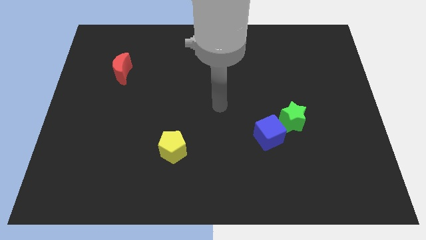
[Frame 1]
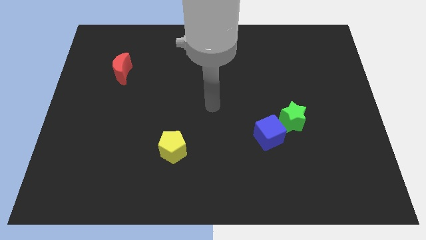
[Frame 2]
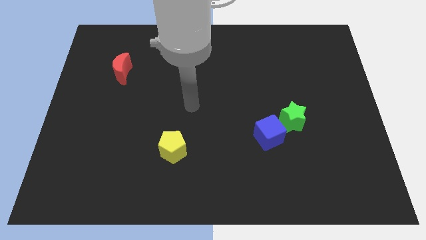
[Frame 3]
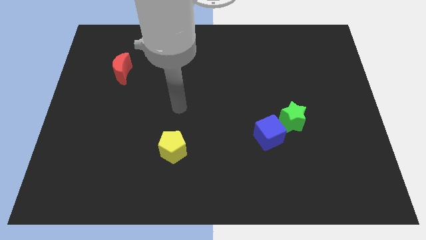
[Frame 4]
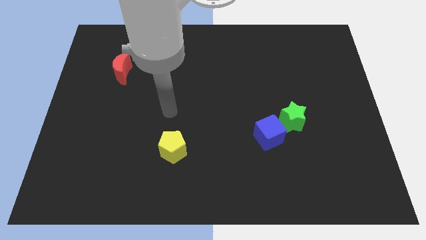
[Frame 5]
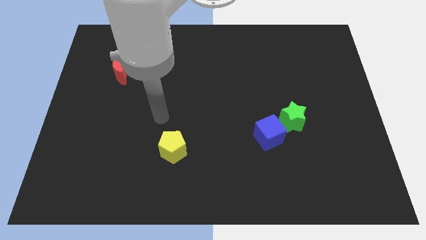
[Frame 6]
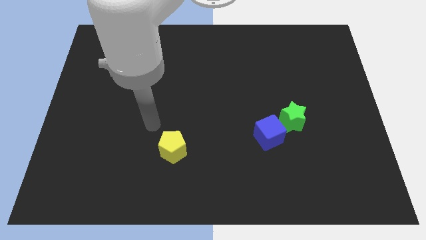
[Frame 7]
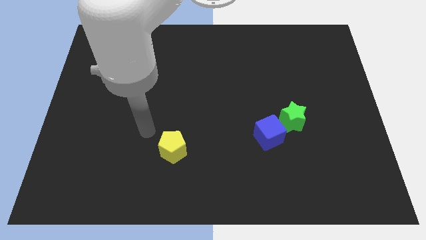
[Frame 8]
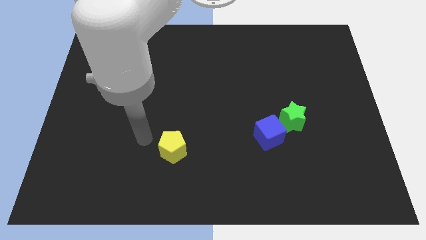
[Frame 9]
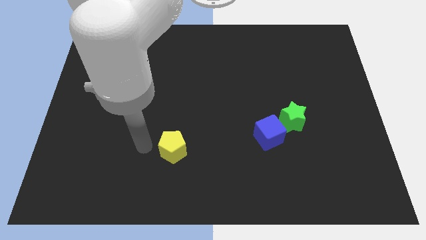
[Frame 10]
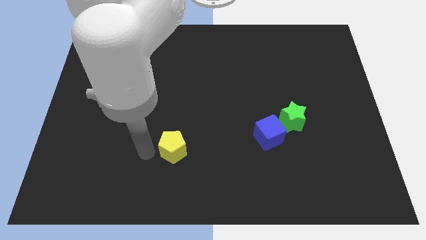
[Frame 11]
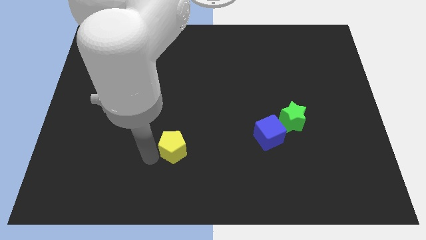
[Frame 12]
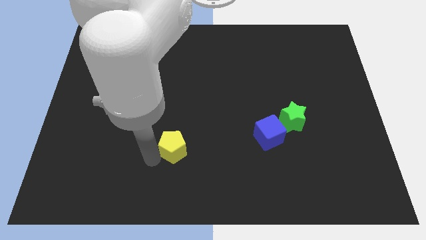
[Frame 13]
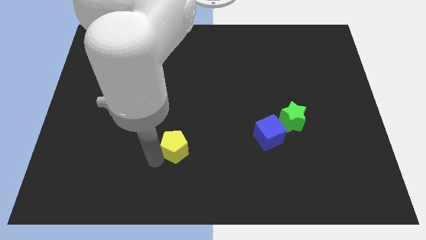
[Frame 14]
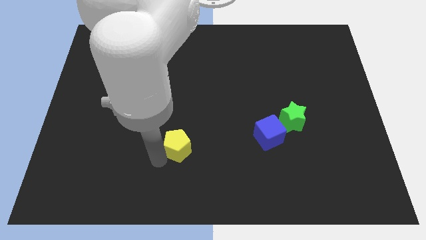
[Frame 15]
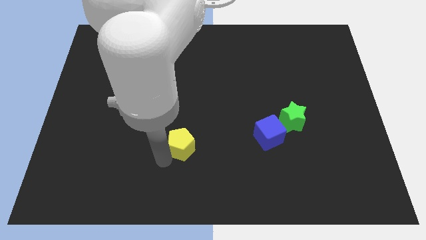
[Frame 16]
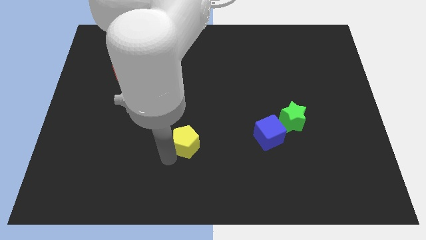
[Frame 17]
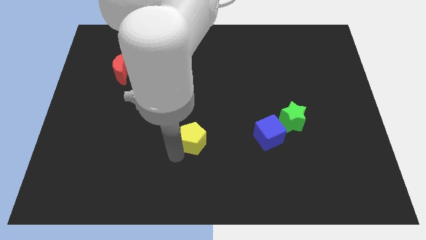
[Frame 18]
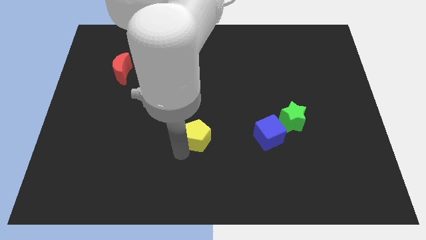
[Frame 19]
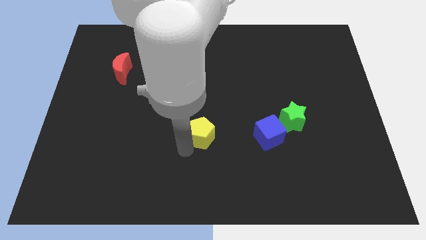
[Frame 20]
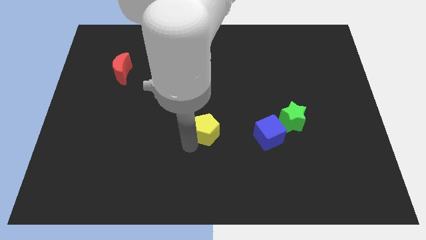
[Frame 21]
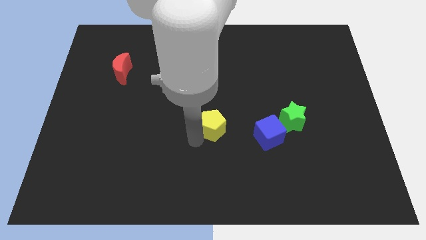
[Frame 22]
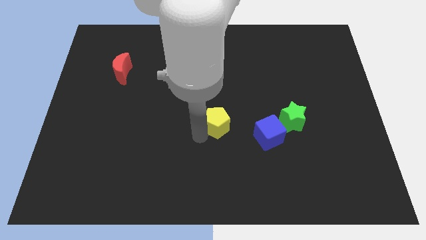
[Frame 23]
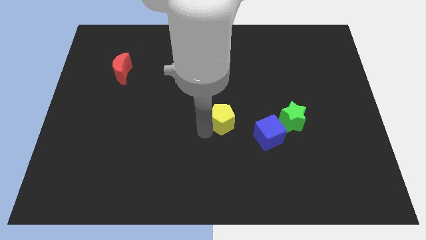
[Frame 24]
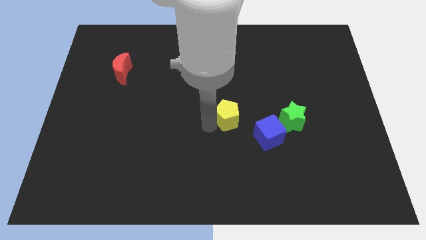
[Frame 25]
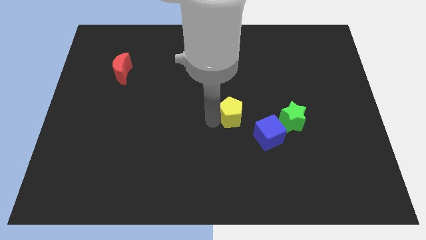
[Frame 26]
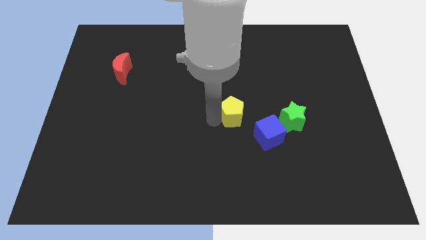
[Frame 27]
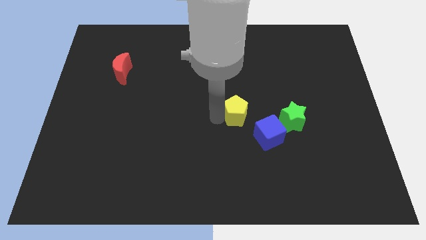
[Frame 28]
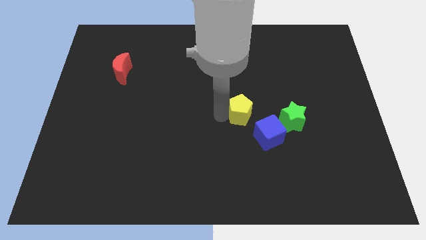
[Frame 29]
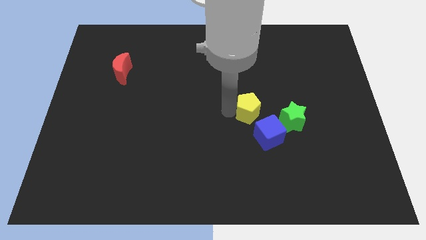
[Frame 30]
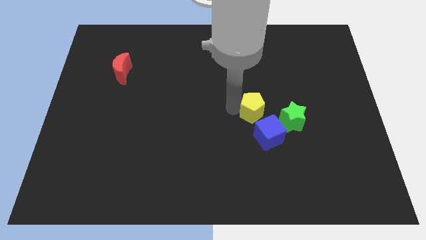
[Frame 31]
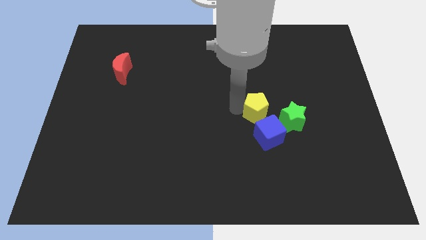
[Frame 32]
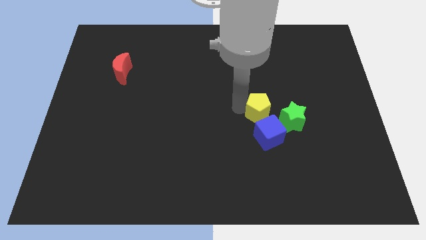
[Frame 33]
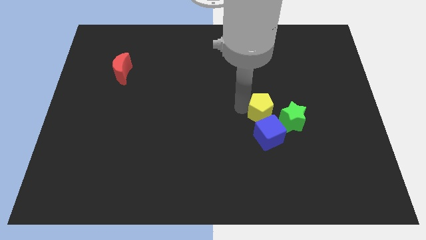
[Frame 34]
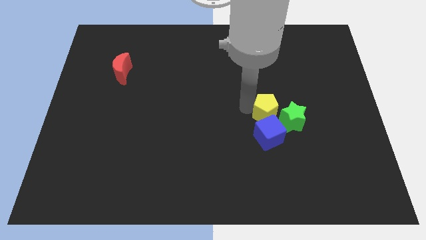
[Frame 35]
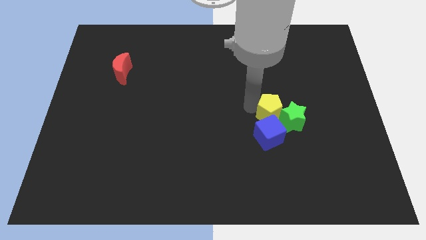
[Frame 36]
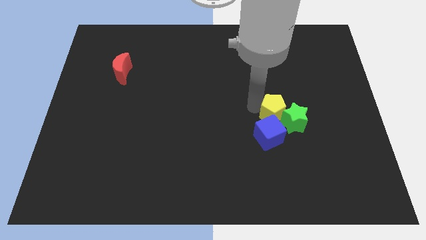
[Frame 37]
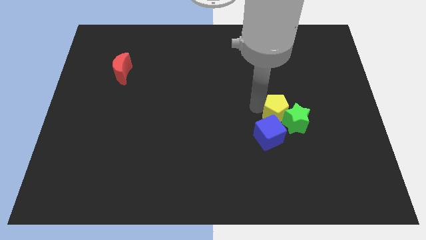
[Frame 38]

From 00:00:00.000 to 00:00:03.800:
put the pentagon towards the green block

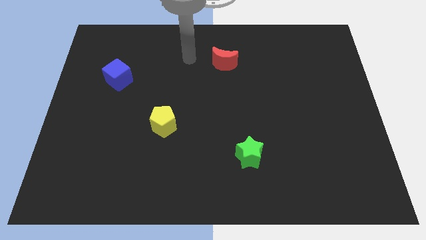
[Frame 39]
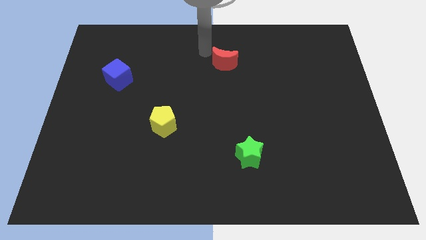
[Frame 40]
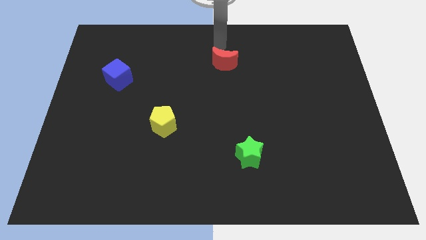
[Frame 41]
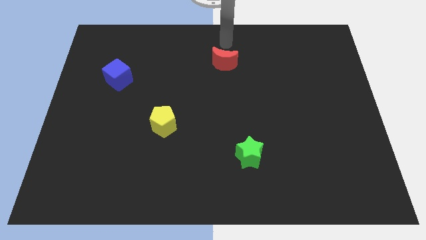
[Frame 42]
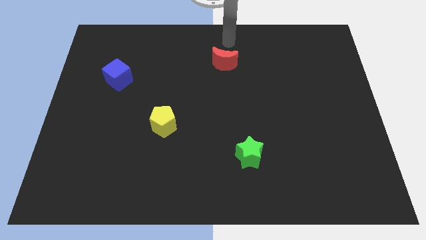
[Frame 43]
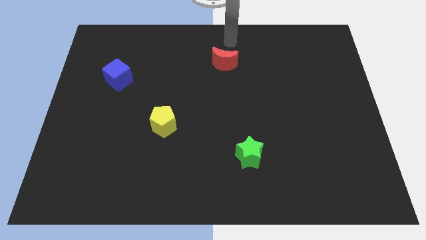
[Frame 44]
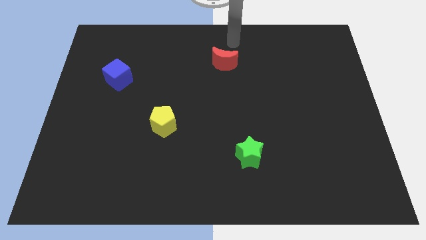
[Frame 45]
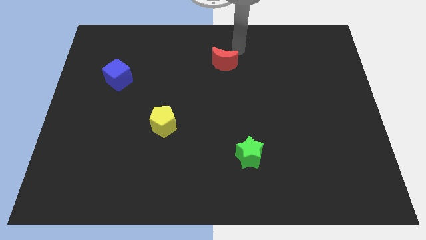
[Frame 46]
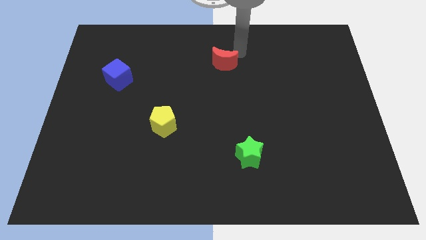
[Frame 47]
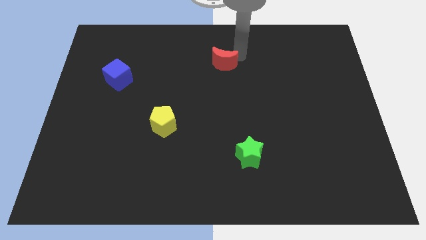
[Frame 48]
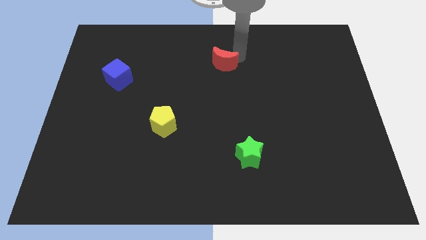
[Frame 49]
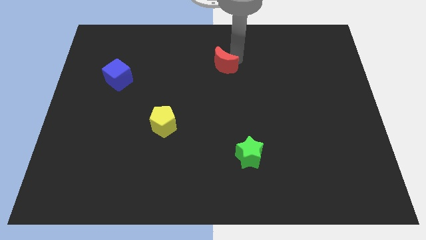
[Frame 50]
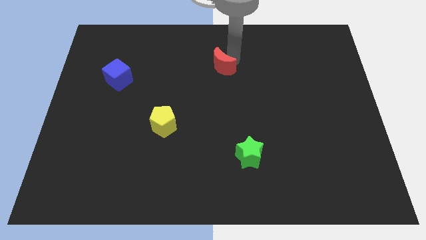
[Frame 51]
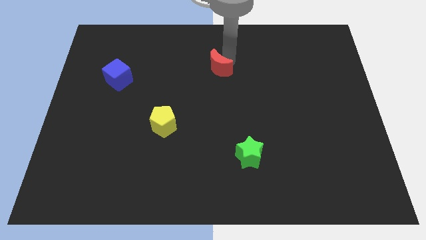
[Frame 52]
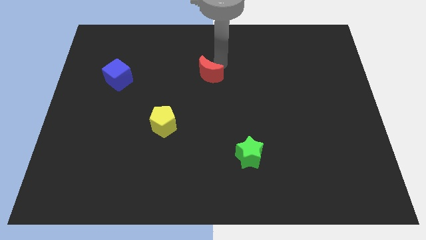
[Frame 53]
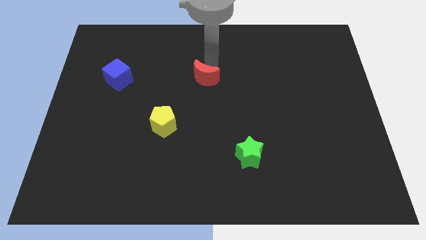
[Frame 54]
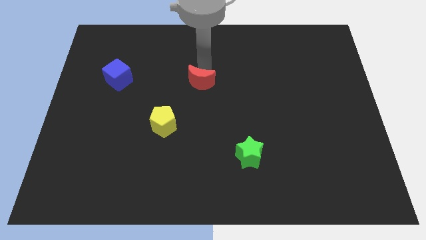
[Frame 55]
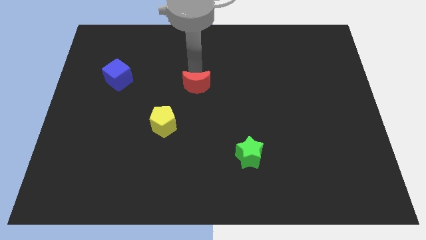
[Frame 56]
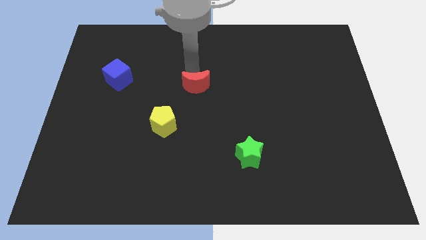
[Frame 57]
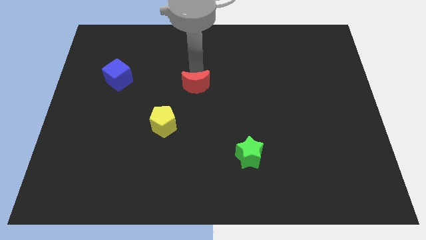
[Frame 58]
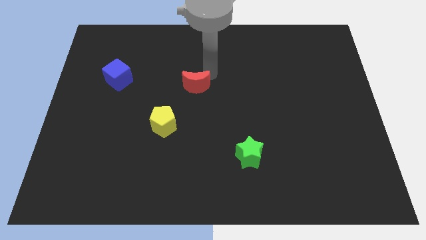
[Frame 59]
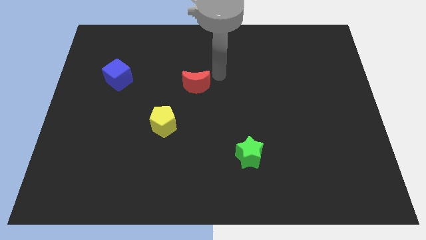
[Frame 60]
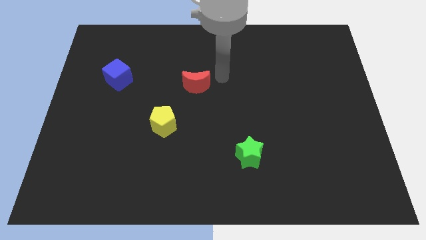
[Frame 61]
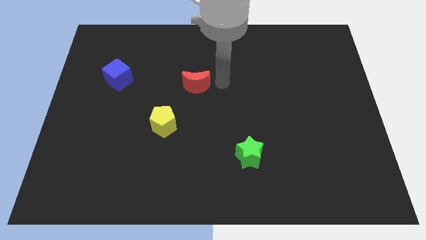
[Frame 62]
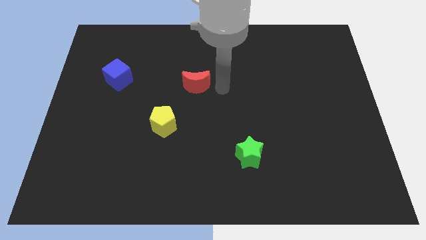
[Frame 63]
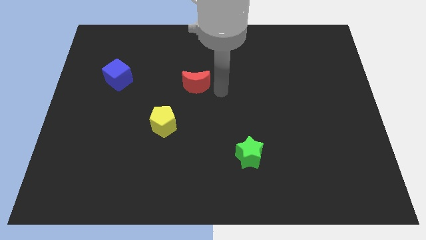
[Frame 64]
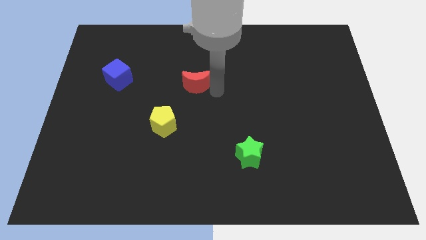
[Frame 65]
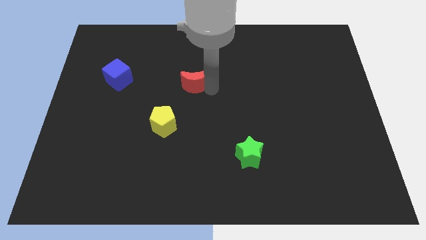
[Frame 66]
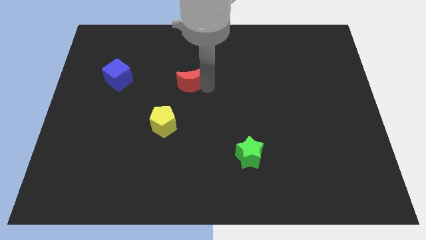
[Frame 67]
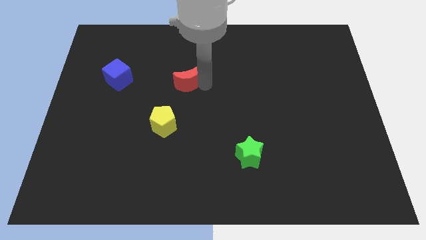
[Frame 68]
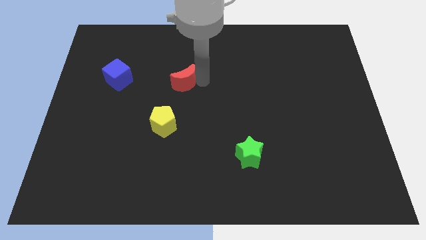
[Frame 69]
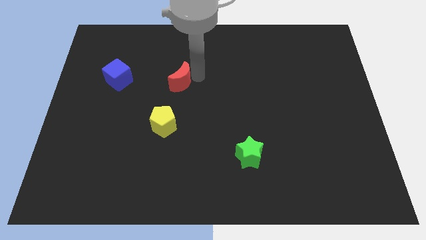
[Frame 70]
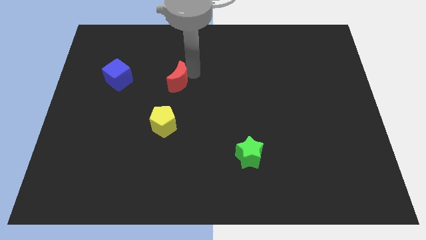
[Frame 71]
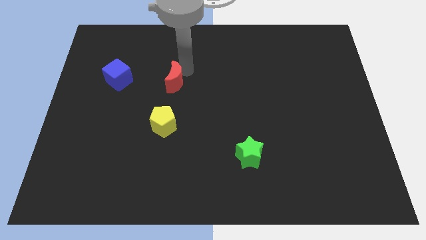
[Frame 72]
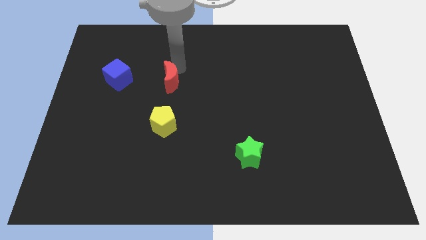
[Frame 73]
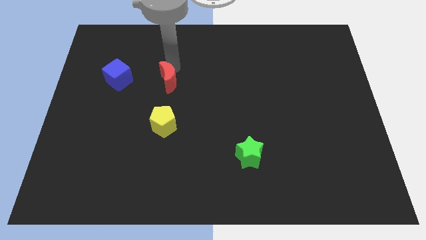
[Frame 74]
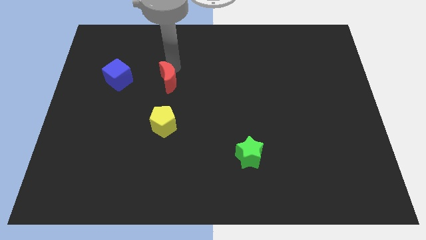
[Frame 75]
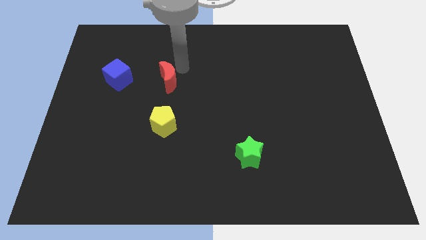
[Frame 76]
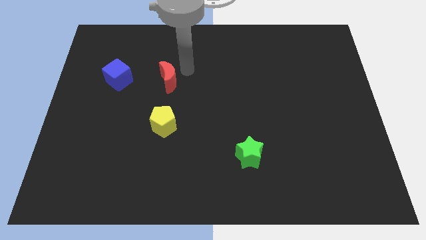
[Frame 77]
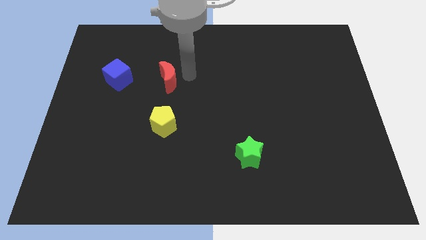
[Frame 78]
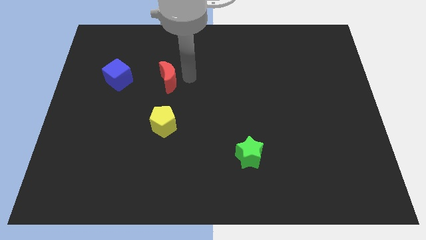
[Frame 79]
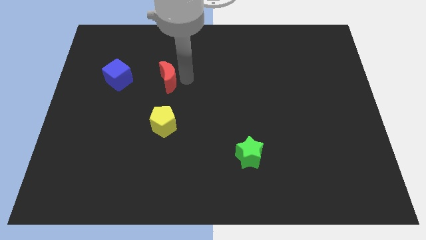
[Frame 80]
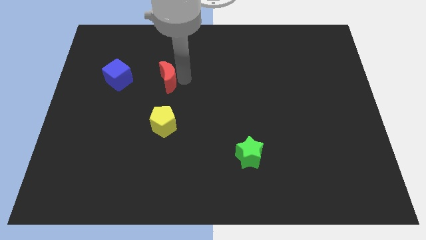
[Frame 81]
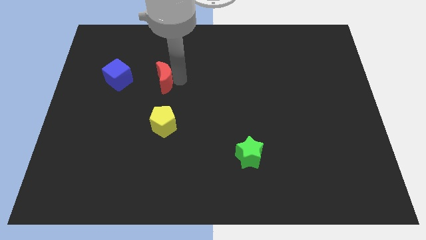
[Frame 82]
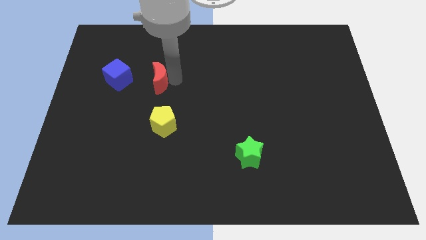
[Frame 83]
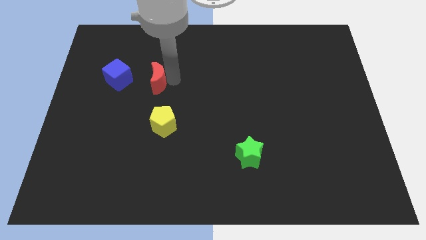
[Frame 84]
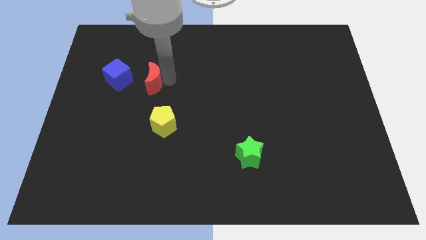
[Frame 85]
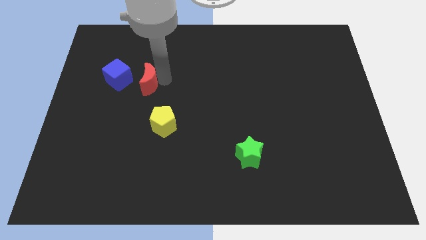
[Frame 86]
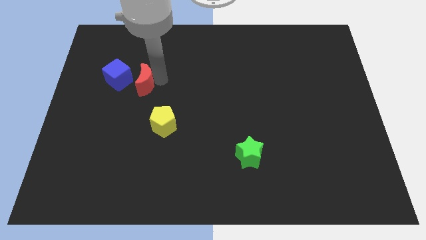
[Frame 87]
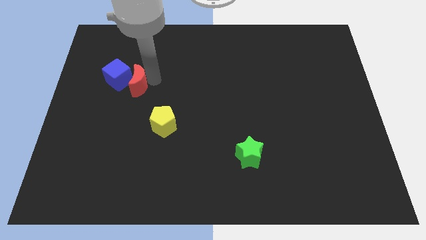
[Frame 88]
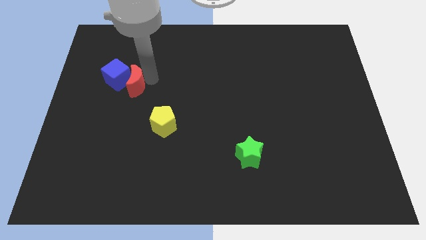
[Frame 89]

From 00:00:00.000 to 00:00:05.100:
move the red block towards the blue block

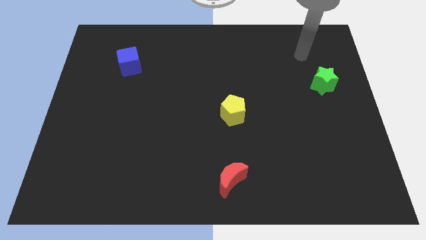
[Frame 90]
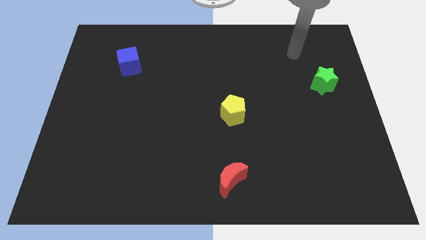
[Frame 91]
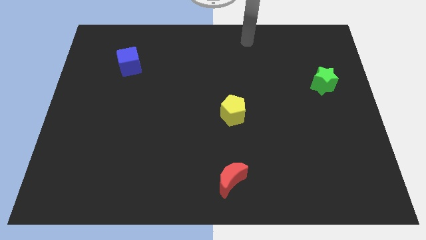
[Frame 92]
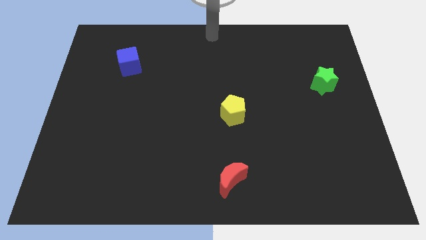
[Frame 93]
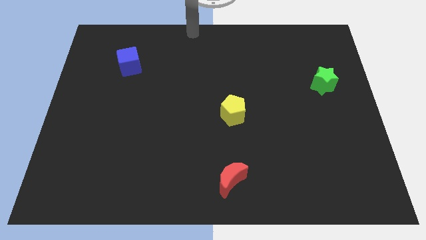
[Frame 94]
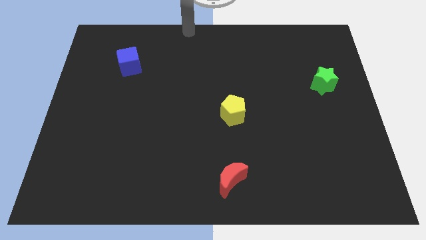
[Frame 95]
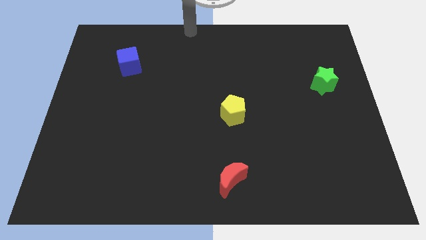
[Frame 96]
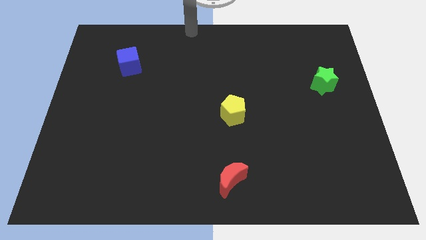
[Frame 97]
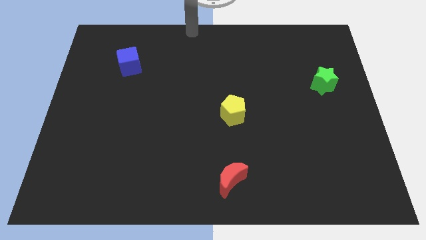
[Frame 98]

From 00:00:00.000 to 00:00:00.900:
push the cube towards the red moon
